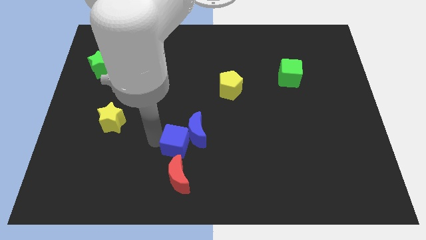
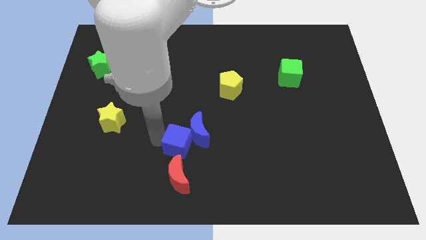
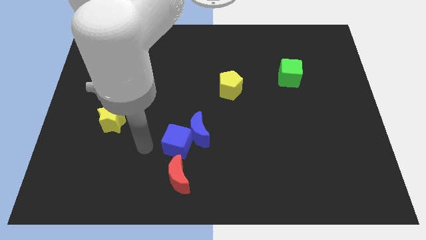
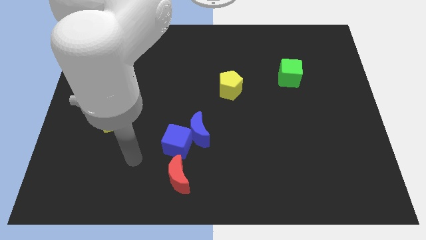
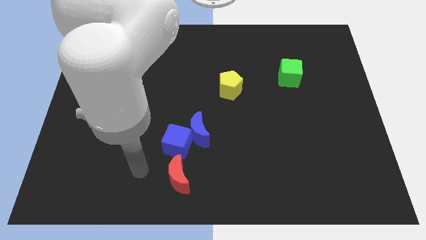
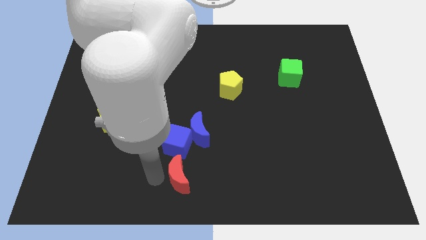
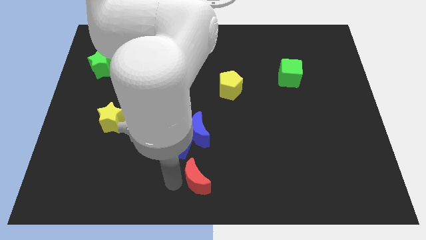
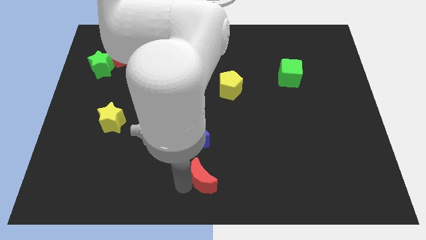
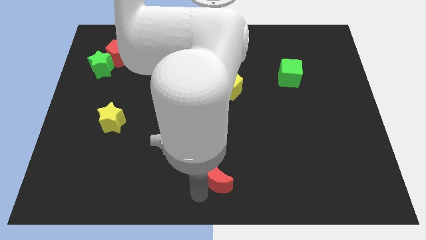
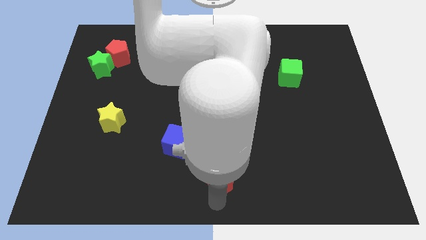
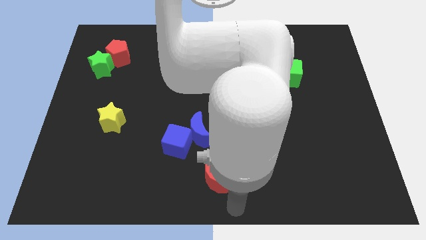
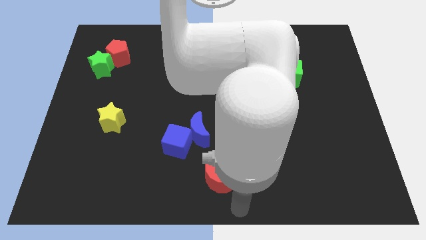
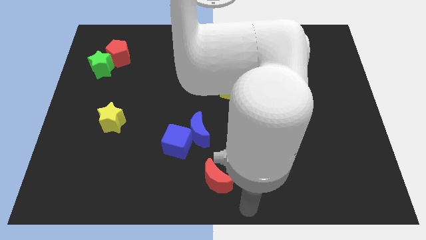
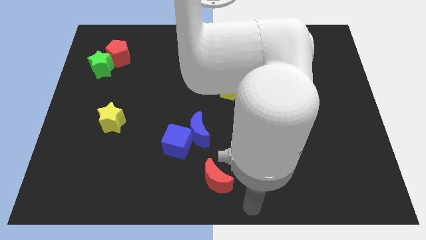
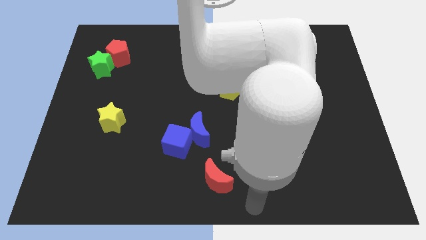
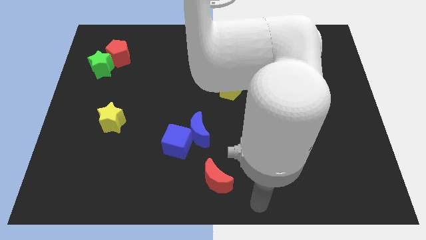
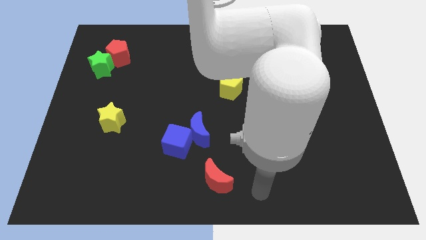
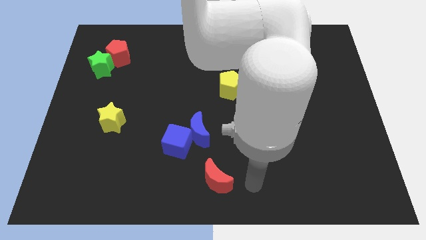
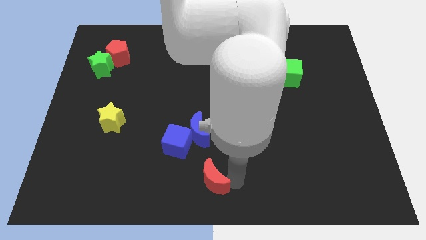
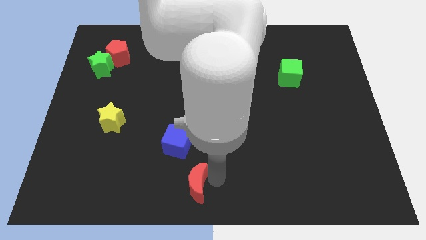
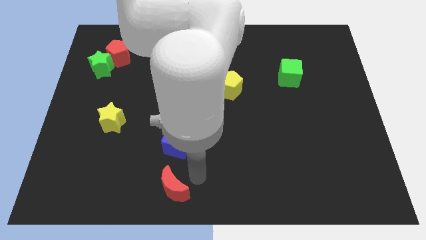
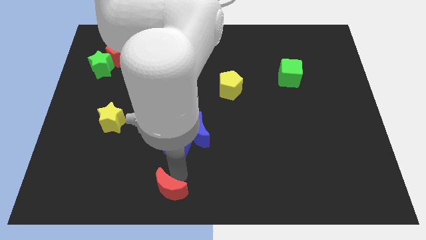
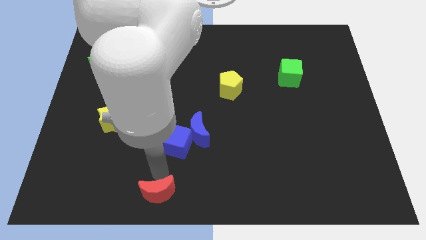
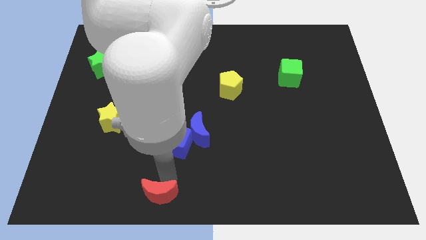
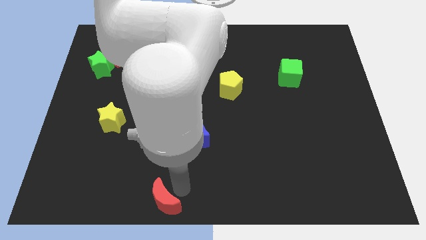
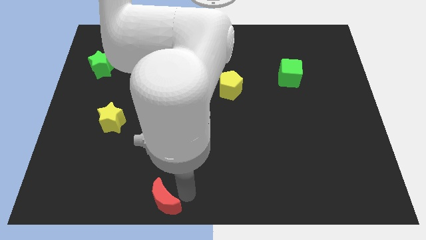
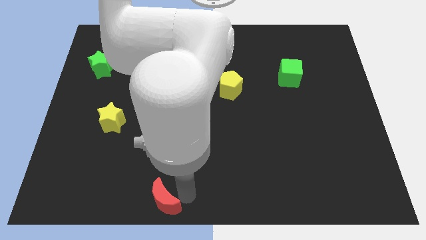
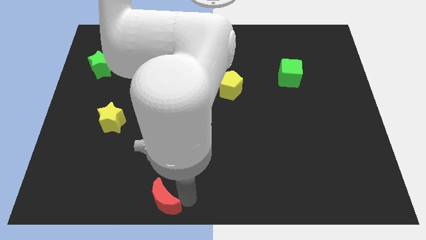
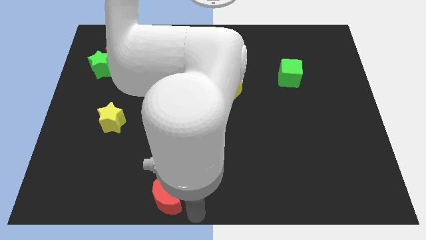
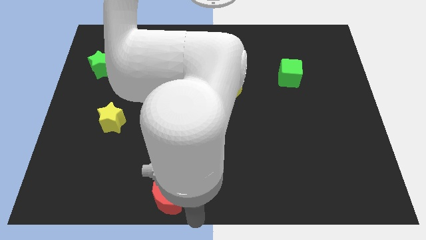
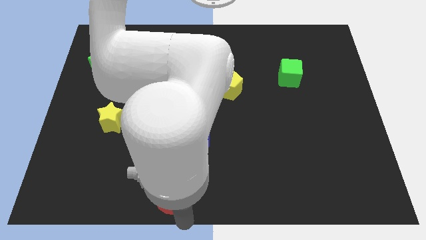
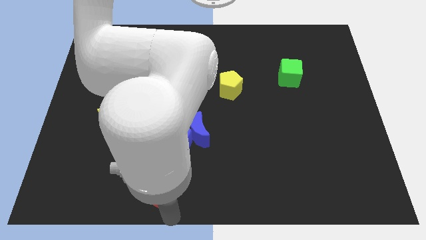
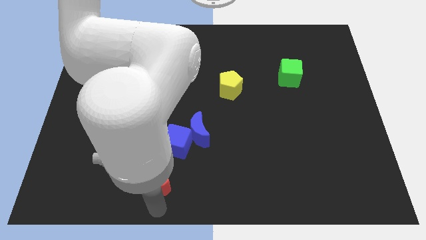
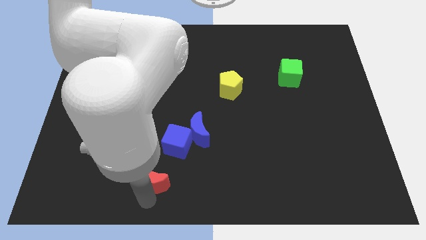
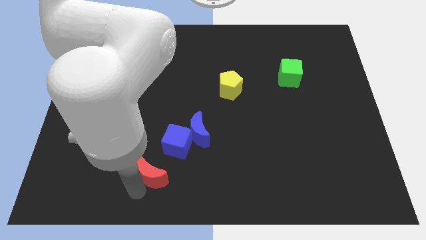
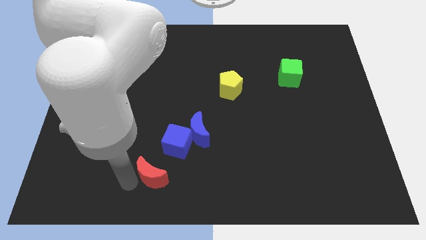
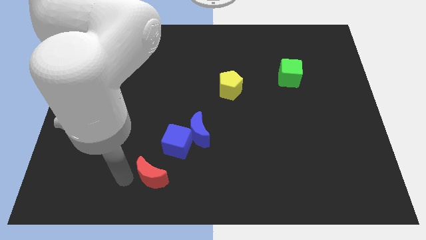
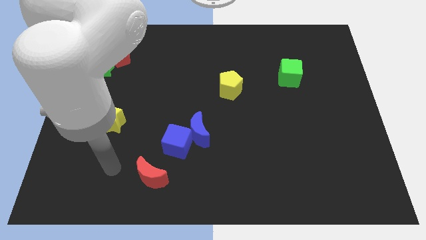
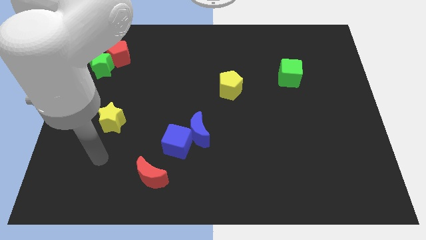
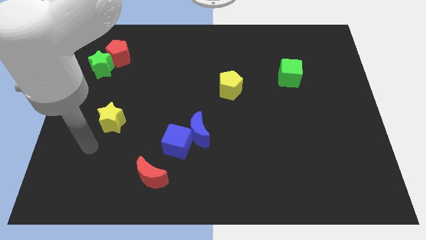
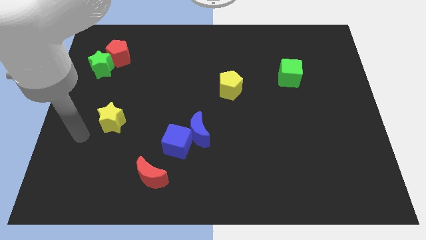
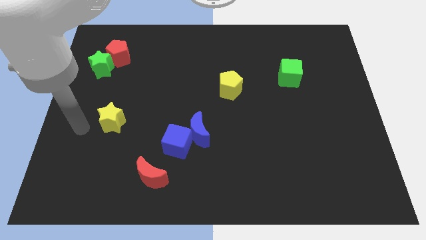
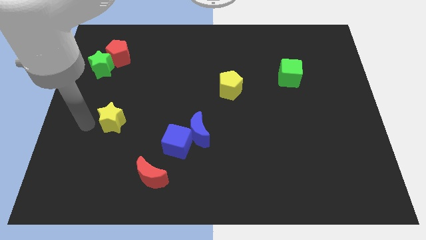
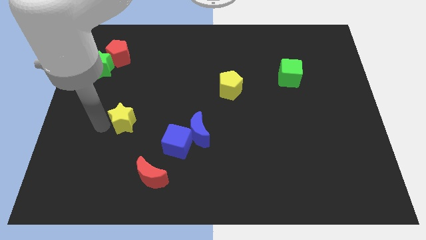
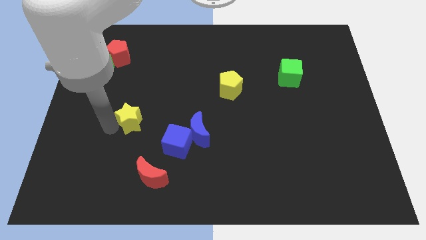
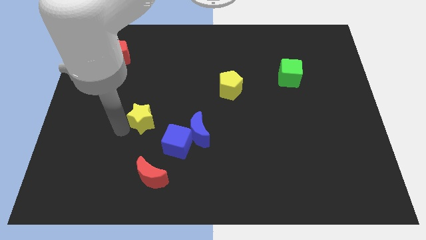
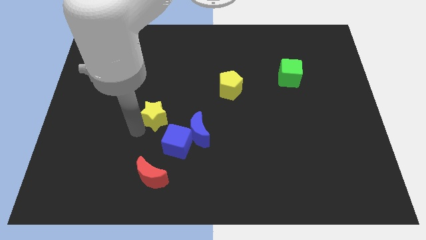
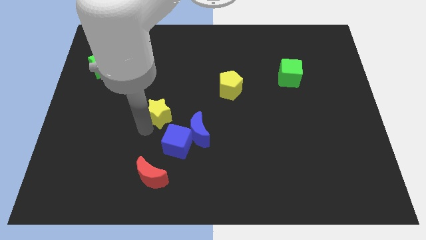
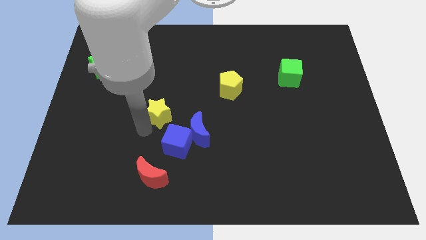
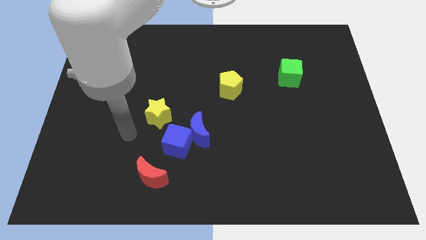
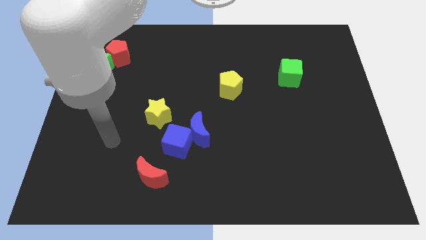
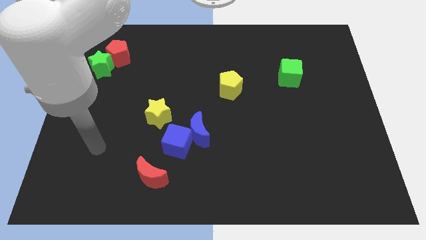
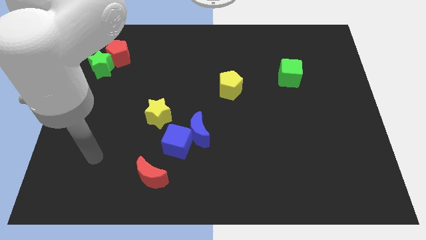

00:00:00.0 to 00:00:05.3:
slide yellow star diagonally at the bottom right of the green star

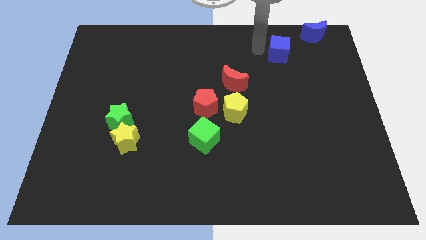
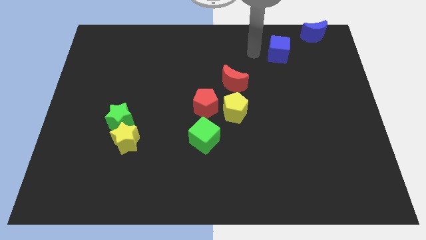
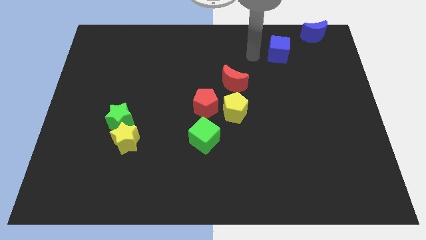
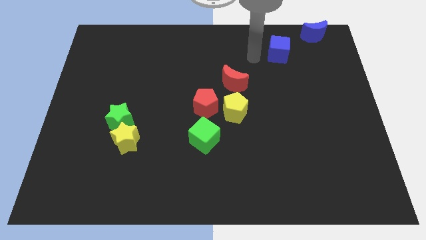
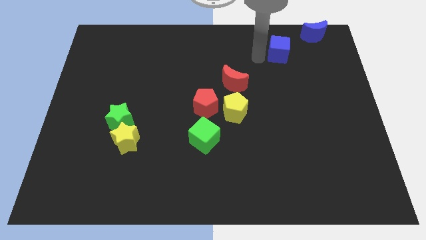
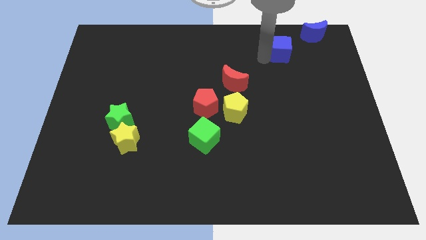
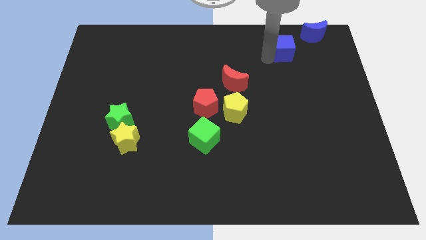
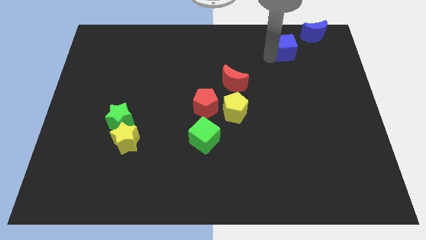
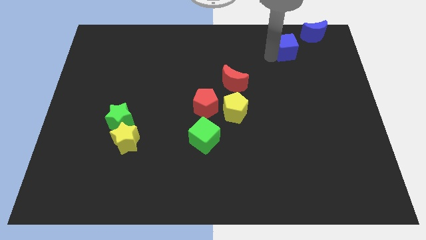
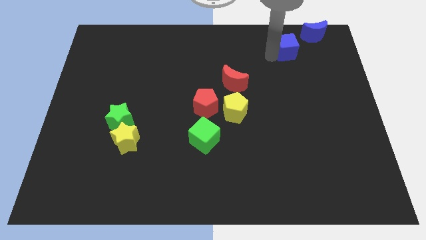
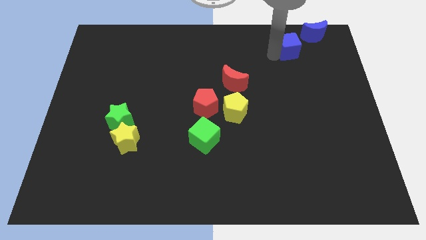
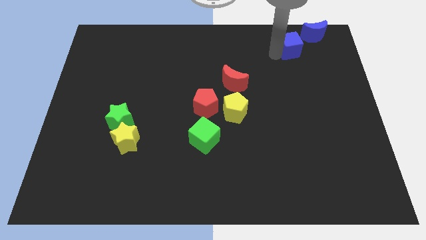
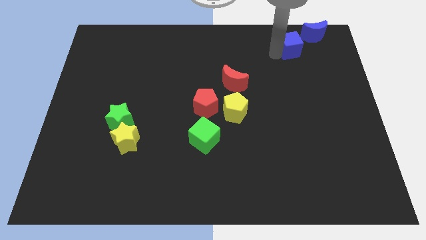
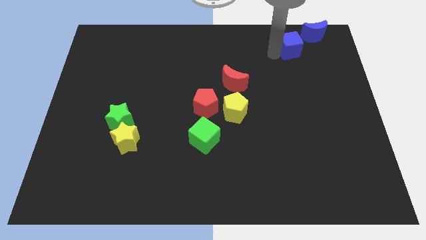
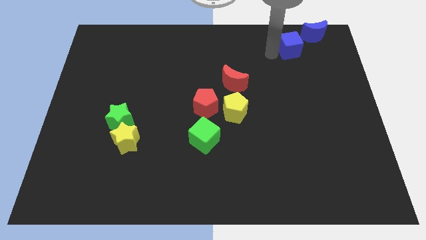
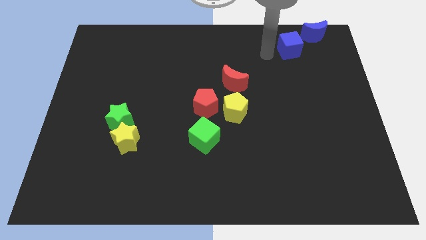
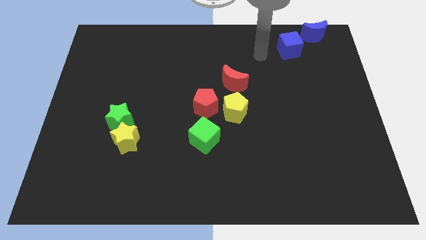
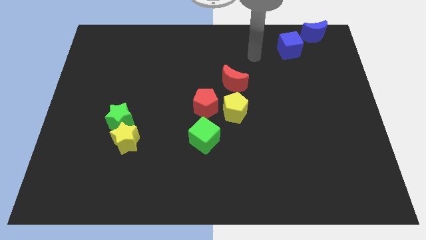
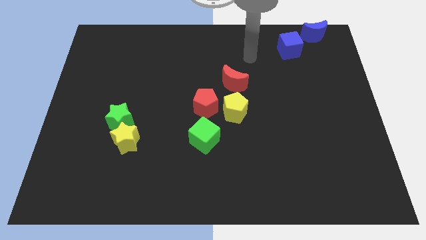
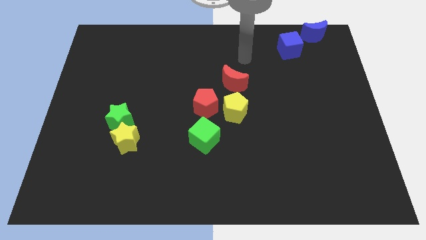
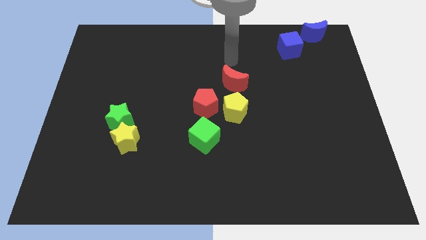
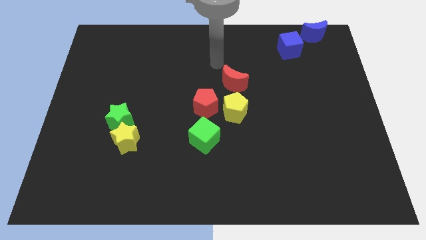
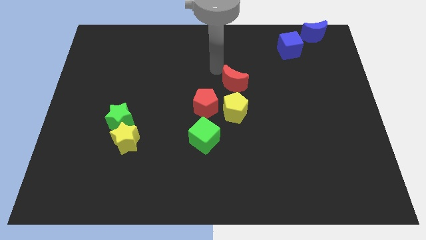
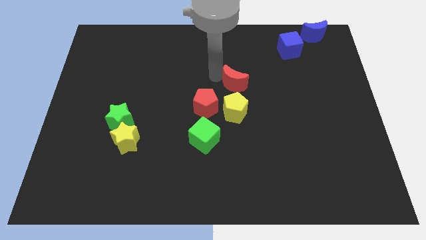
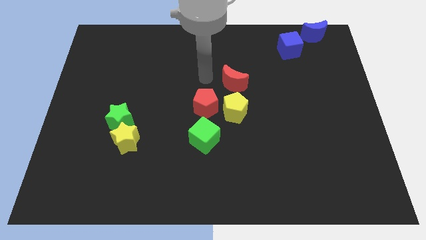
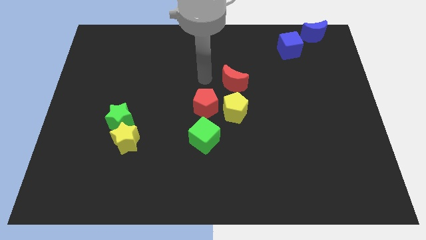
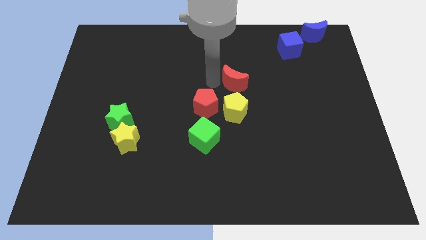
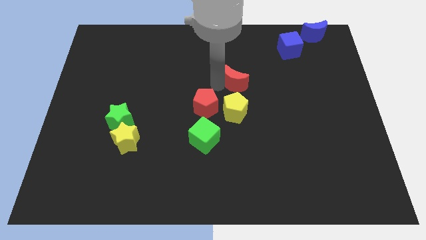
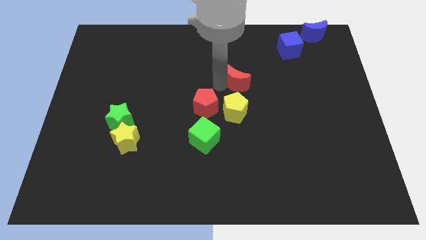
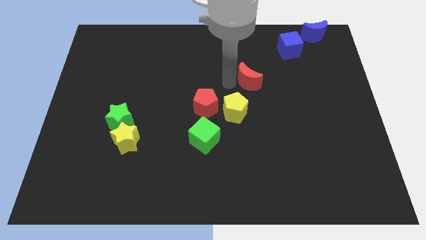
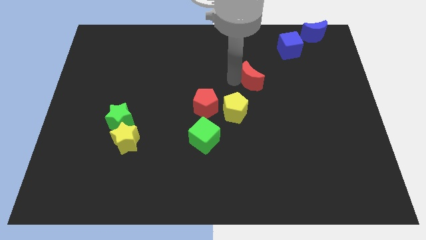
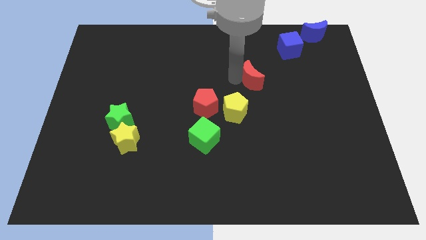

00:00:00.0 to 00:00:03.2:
move the blue cube to the bottom right of the blue moon

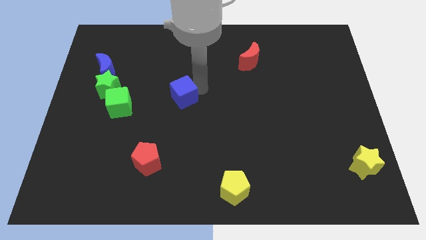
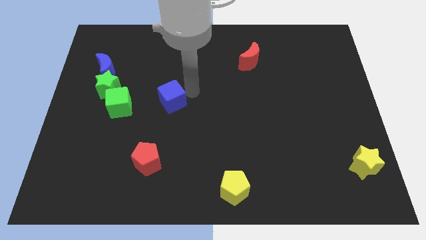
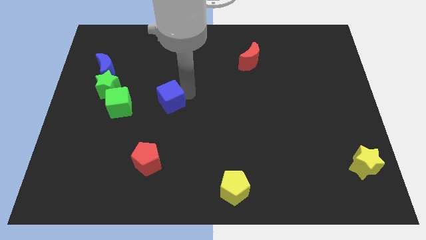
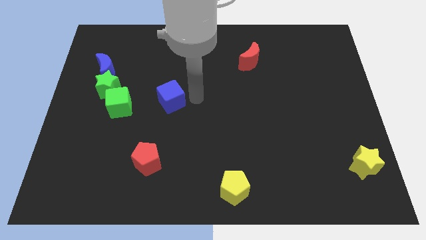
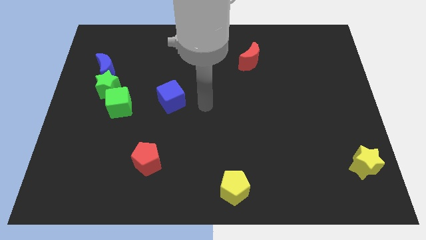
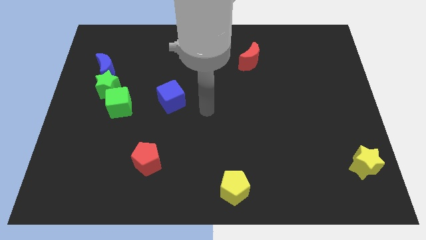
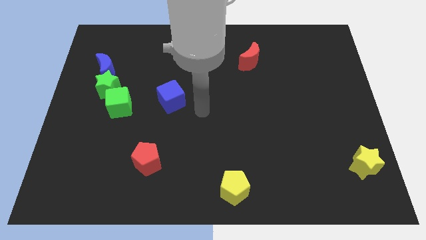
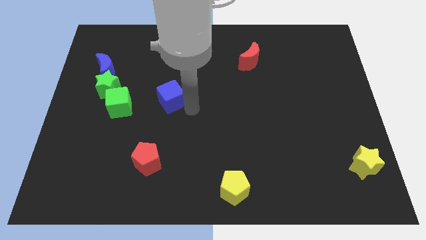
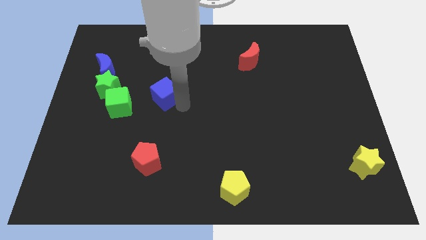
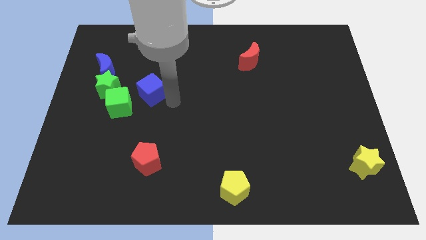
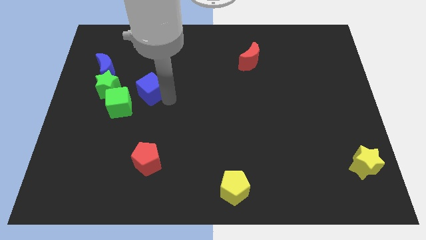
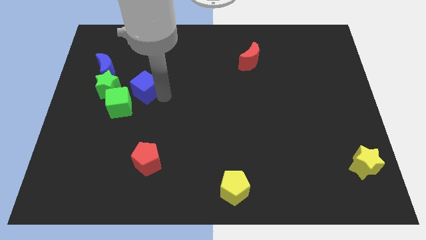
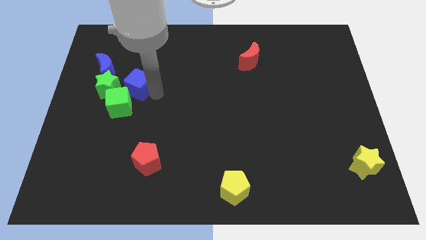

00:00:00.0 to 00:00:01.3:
place the blue cube at the right side of the green star
